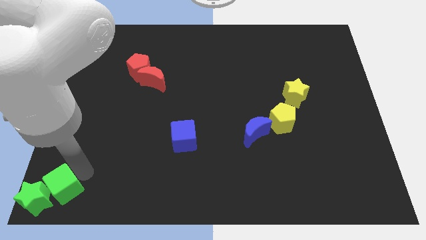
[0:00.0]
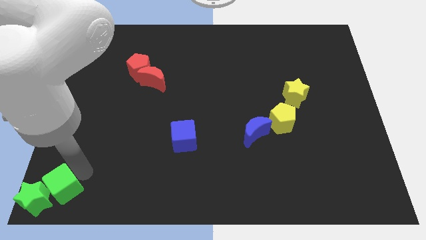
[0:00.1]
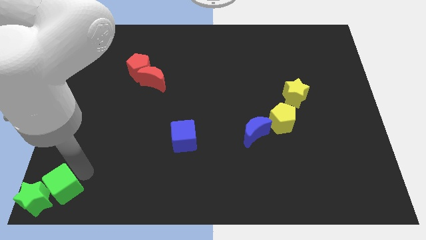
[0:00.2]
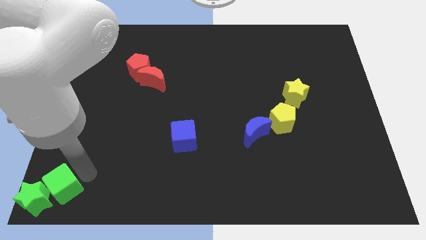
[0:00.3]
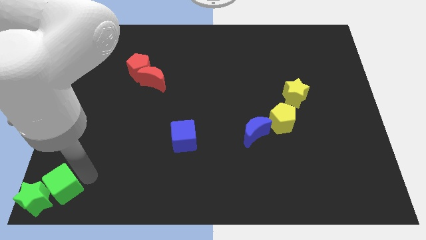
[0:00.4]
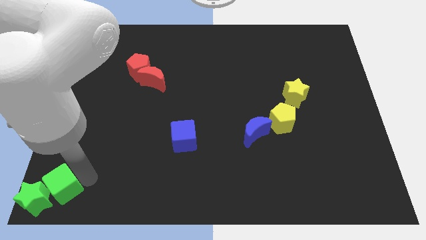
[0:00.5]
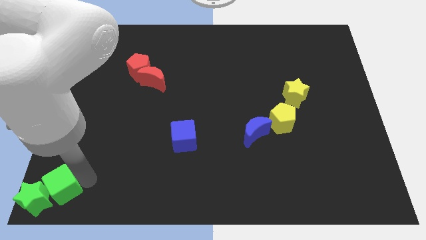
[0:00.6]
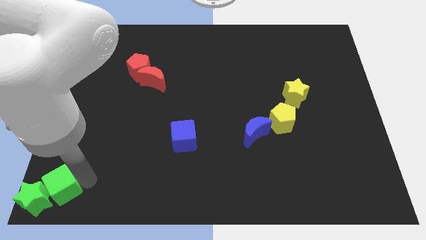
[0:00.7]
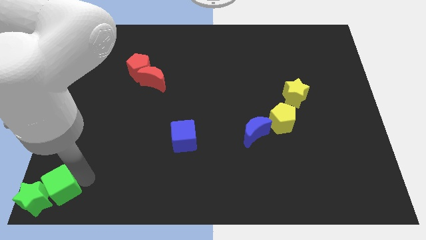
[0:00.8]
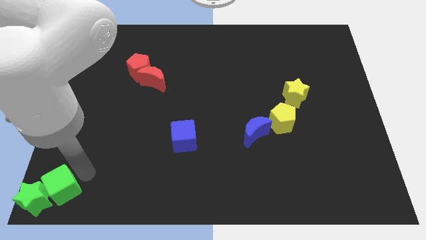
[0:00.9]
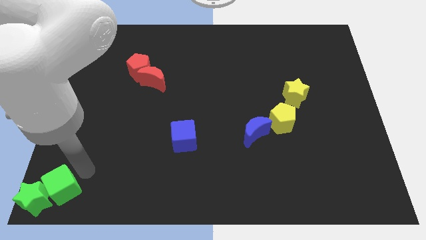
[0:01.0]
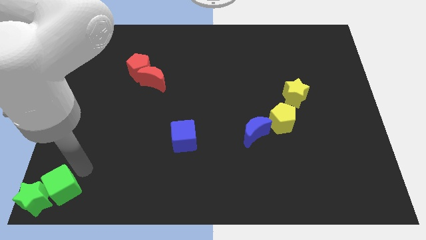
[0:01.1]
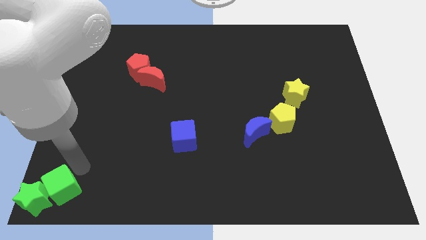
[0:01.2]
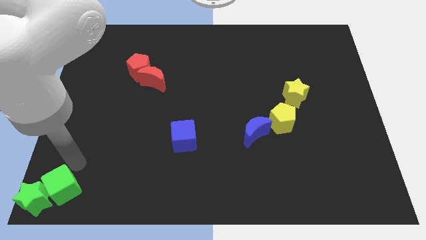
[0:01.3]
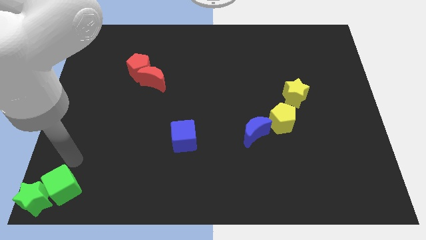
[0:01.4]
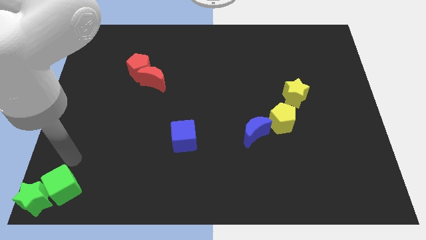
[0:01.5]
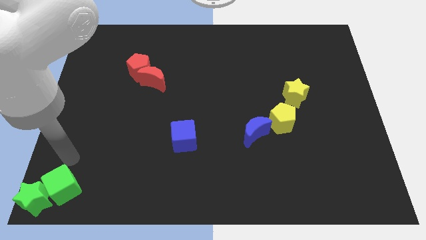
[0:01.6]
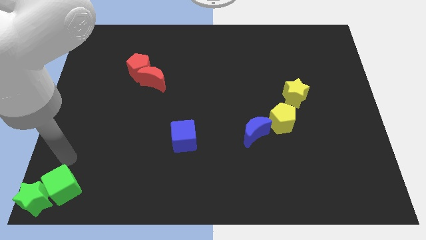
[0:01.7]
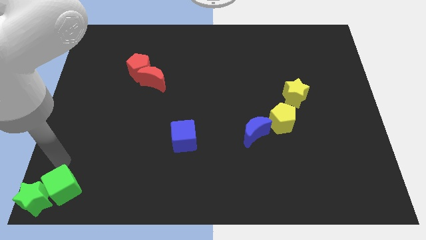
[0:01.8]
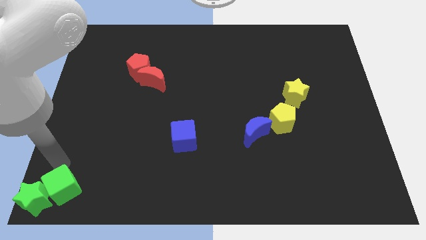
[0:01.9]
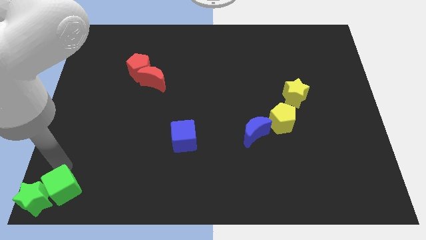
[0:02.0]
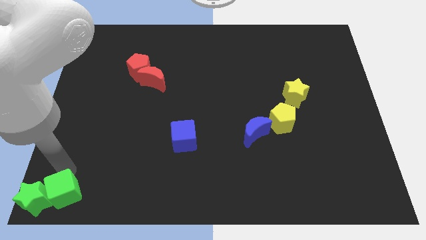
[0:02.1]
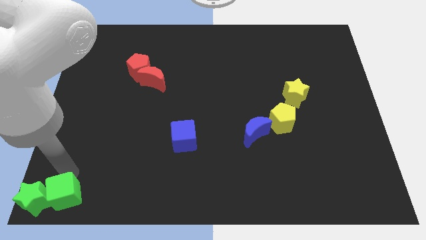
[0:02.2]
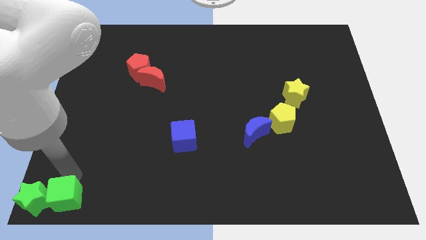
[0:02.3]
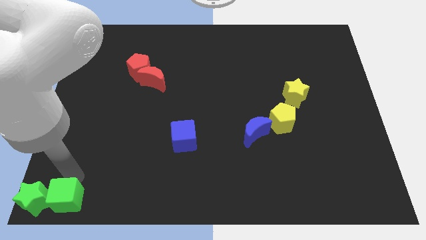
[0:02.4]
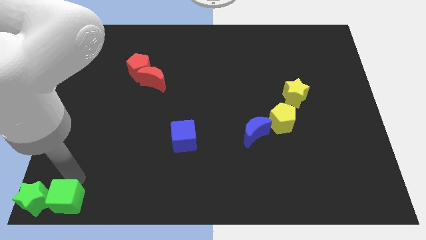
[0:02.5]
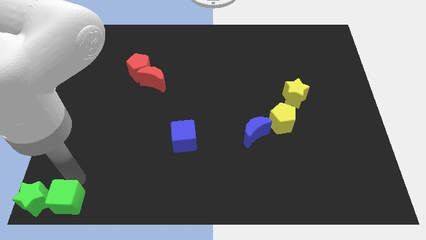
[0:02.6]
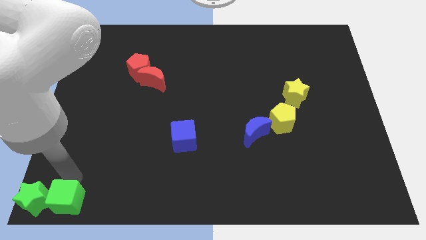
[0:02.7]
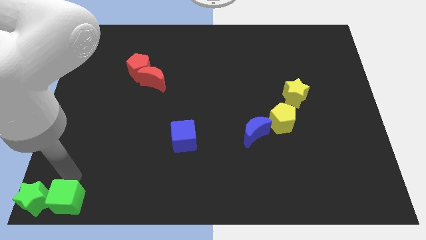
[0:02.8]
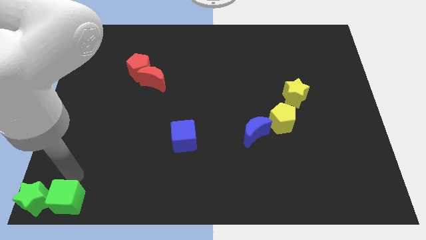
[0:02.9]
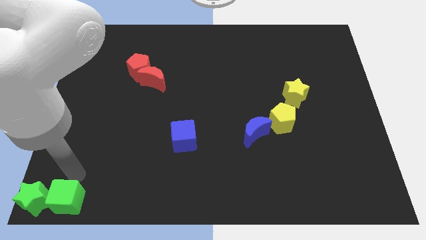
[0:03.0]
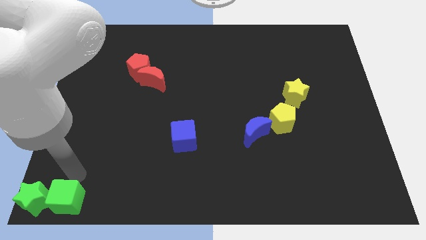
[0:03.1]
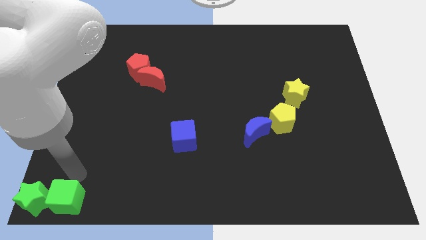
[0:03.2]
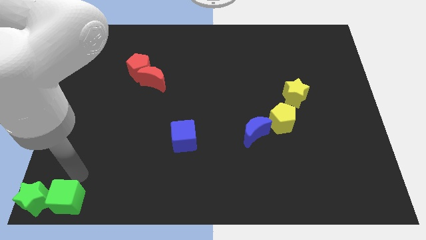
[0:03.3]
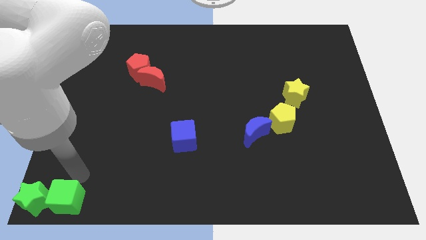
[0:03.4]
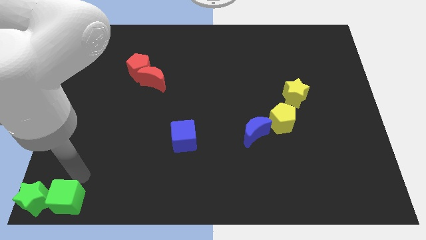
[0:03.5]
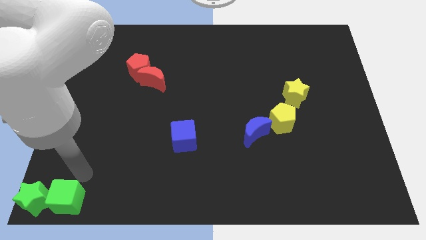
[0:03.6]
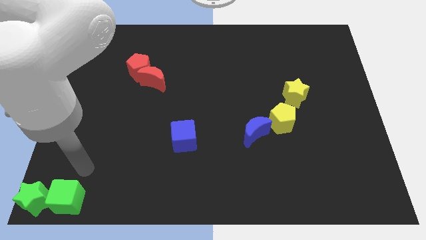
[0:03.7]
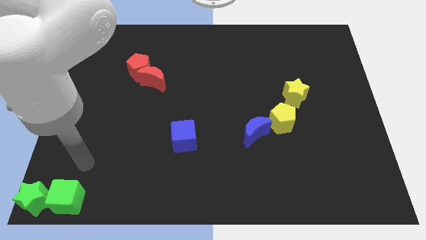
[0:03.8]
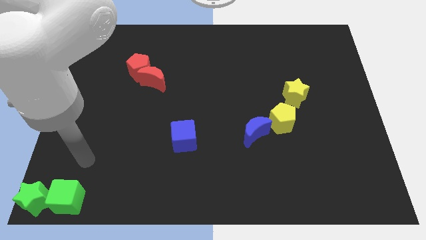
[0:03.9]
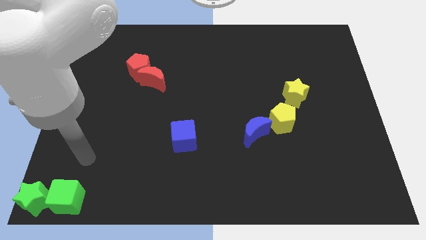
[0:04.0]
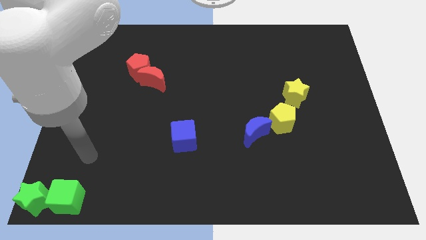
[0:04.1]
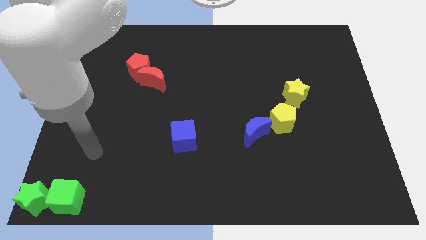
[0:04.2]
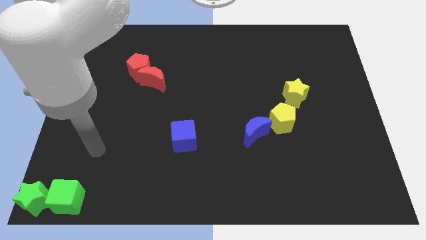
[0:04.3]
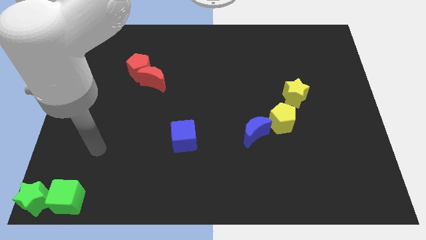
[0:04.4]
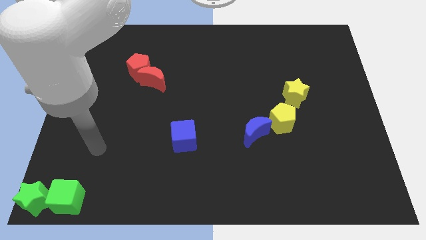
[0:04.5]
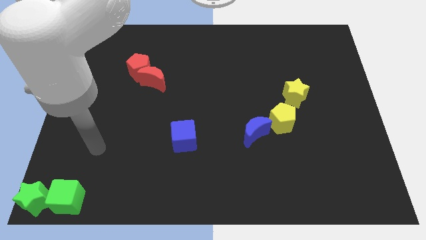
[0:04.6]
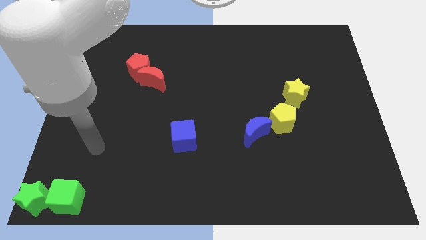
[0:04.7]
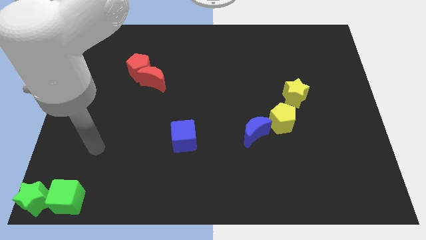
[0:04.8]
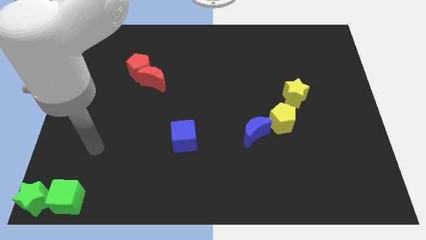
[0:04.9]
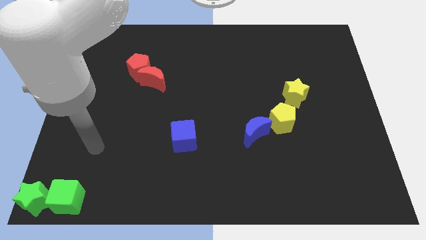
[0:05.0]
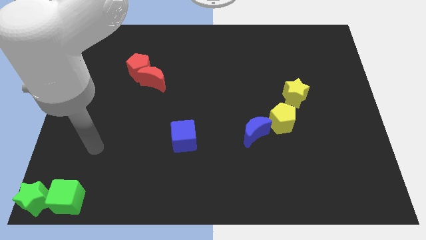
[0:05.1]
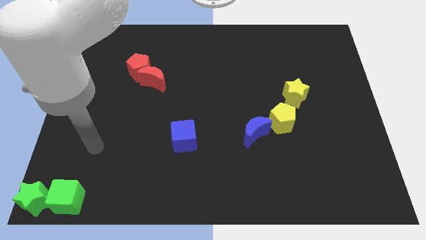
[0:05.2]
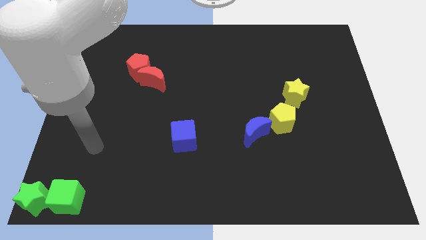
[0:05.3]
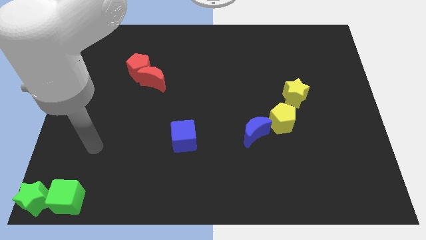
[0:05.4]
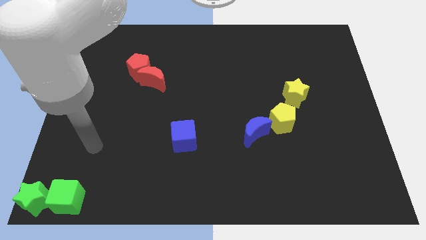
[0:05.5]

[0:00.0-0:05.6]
place the green cube right to the green star

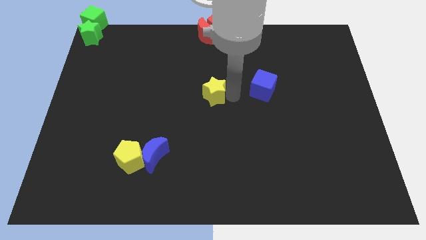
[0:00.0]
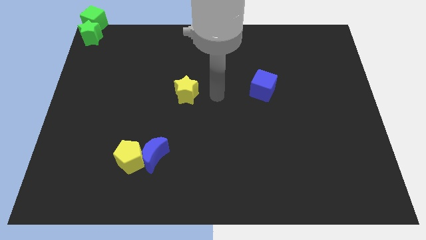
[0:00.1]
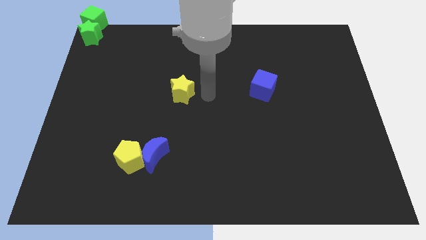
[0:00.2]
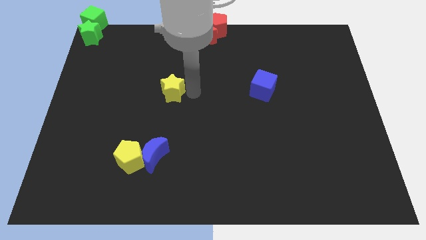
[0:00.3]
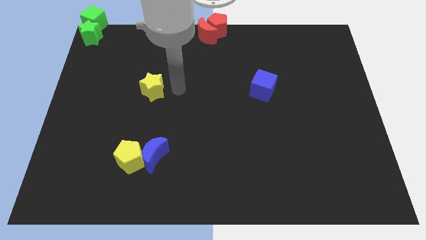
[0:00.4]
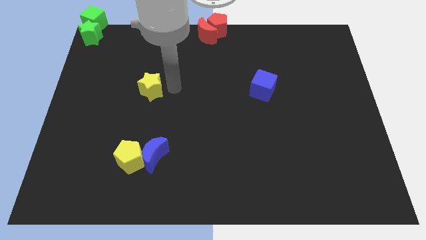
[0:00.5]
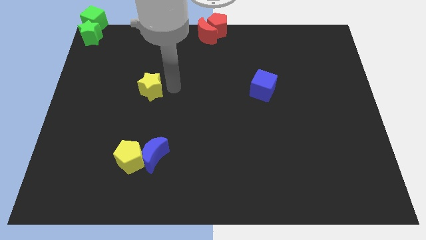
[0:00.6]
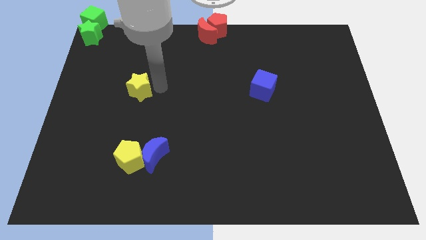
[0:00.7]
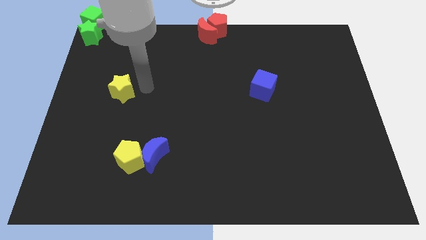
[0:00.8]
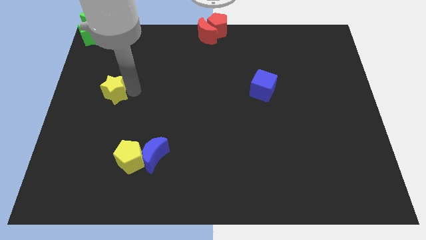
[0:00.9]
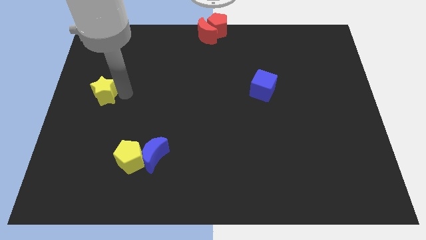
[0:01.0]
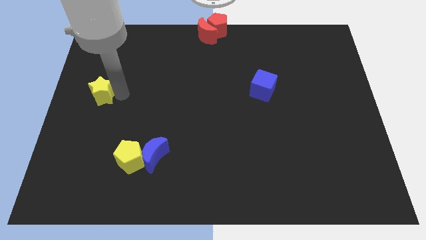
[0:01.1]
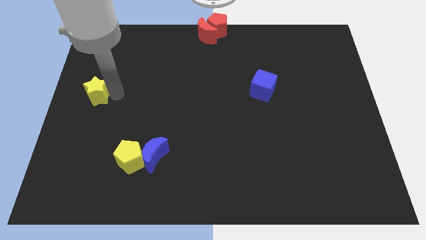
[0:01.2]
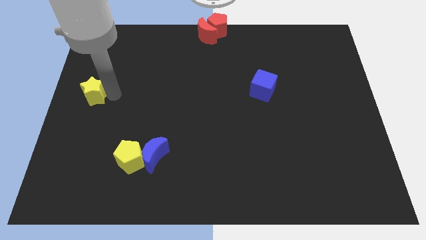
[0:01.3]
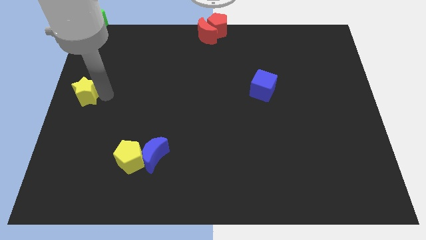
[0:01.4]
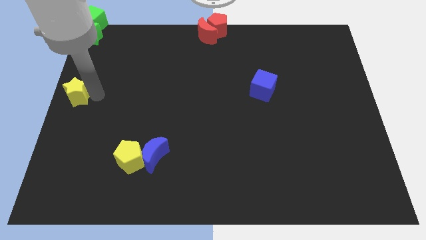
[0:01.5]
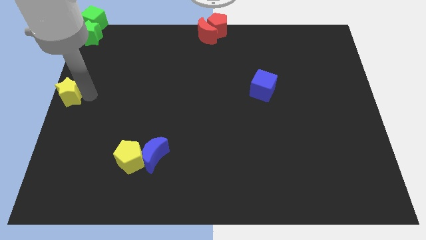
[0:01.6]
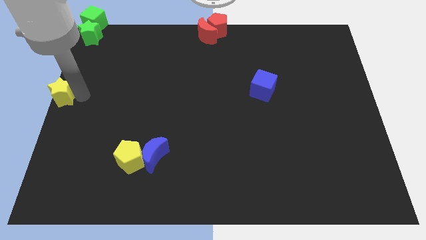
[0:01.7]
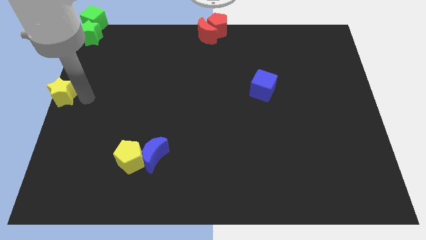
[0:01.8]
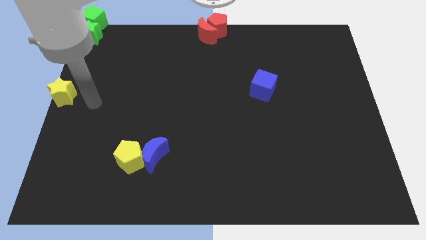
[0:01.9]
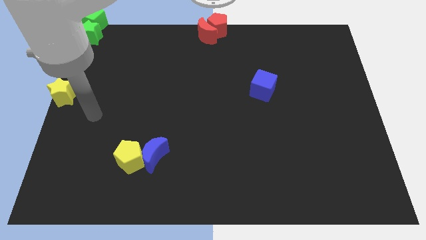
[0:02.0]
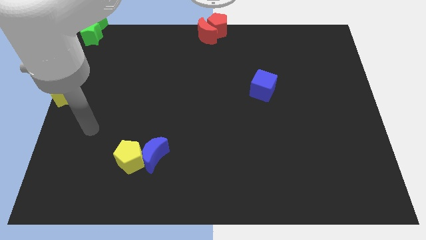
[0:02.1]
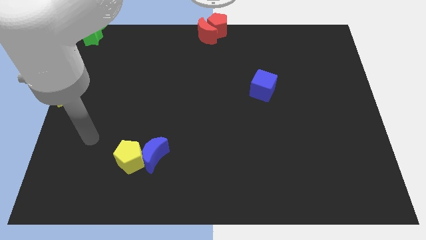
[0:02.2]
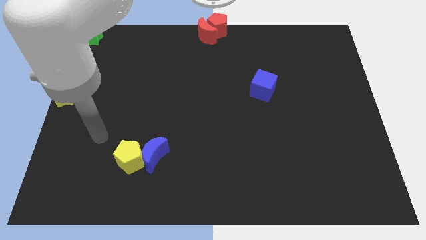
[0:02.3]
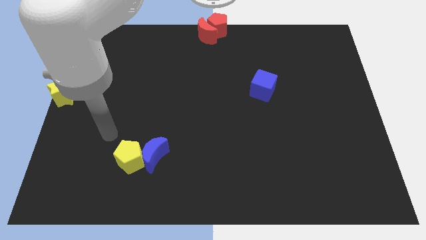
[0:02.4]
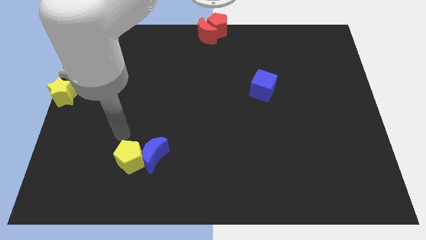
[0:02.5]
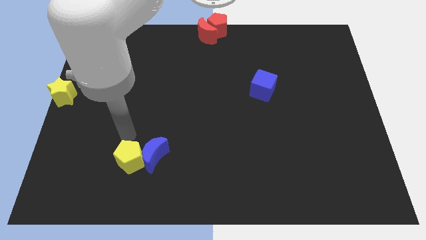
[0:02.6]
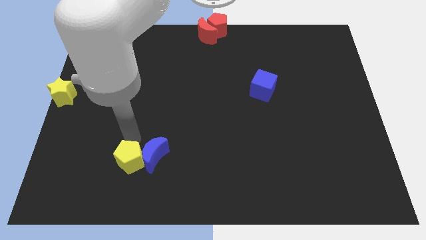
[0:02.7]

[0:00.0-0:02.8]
move the yellow star to the left center of the board

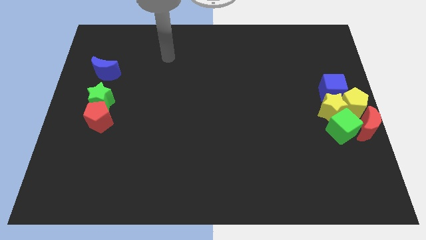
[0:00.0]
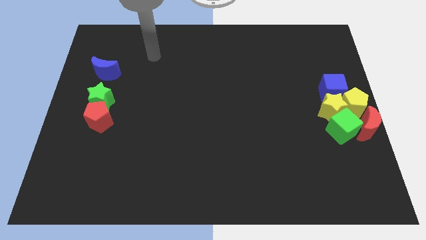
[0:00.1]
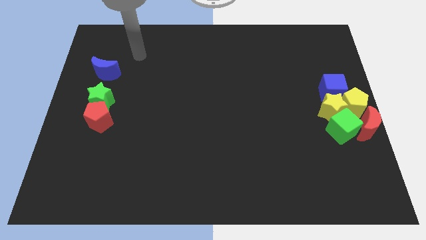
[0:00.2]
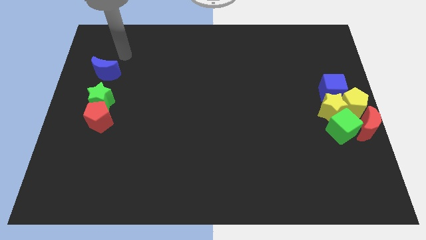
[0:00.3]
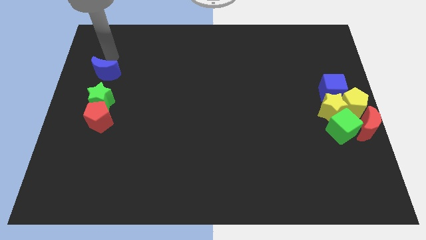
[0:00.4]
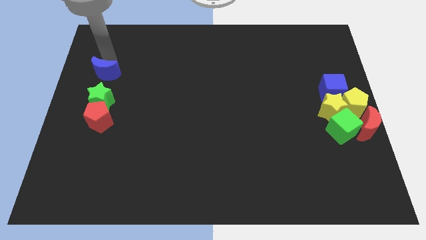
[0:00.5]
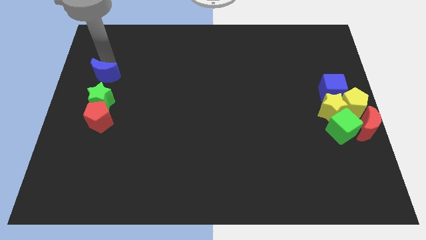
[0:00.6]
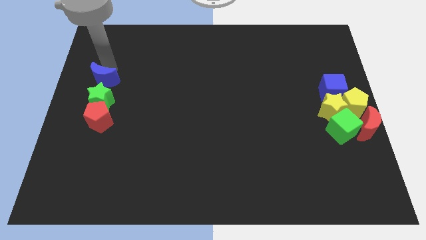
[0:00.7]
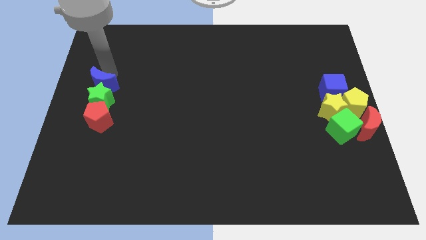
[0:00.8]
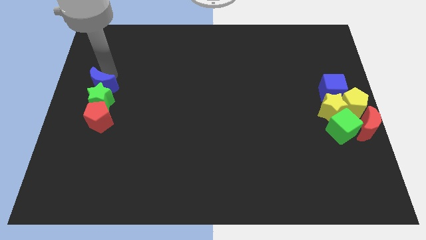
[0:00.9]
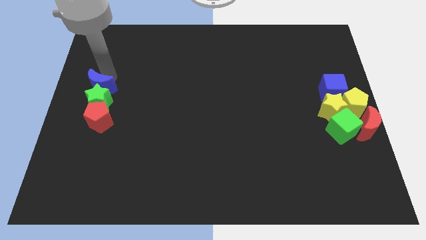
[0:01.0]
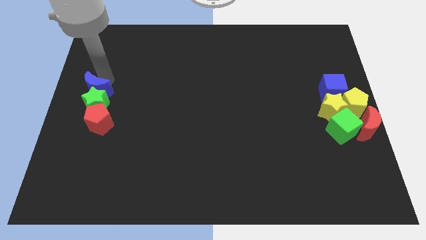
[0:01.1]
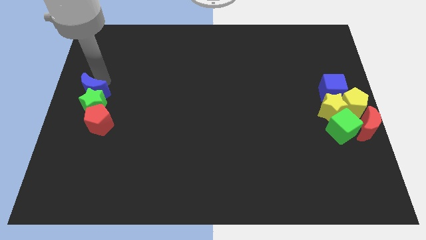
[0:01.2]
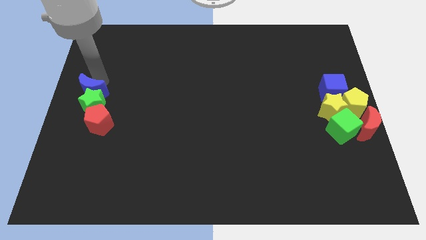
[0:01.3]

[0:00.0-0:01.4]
move the blue crescent into the green star
